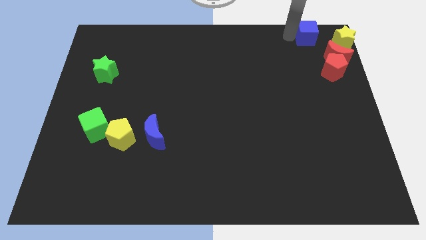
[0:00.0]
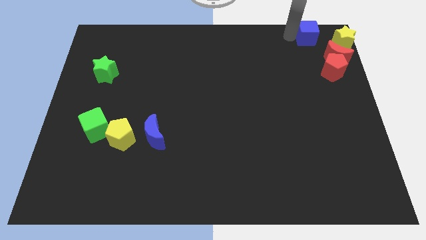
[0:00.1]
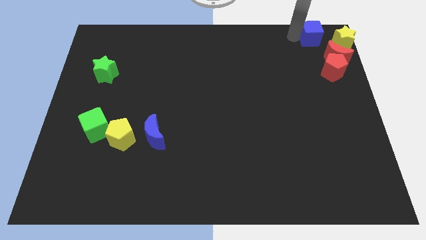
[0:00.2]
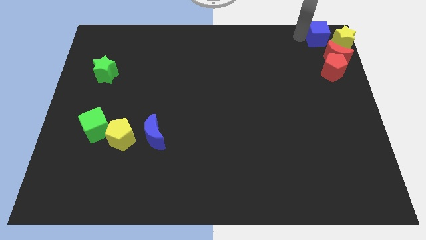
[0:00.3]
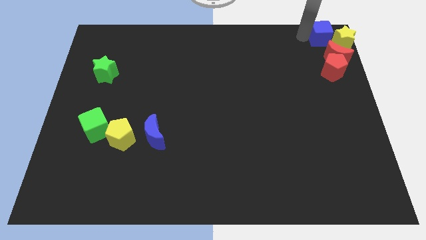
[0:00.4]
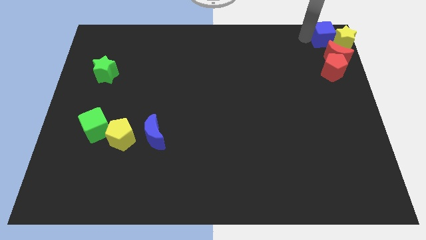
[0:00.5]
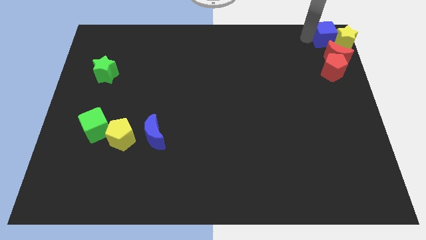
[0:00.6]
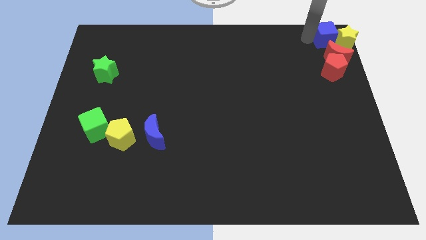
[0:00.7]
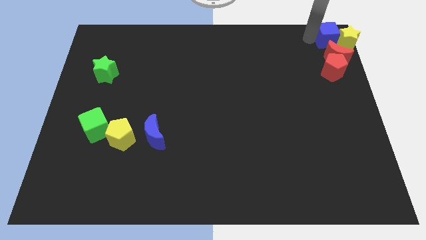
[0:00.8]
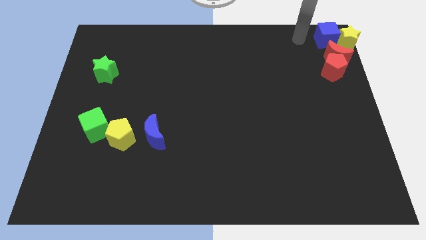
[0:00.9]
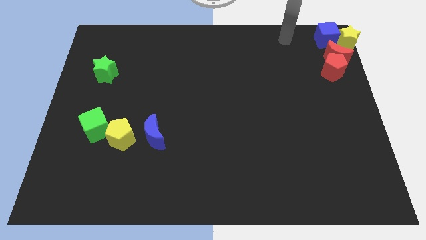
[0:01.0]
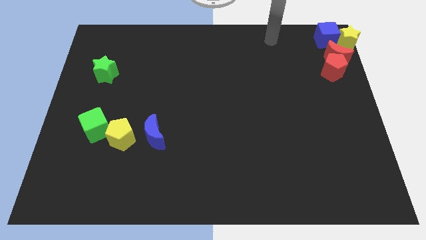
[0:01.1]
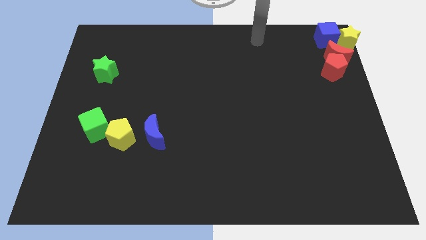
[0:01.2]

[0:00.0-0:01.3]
place the blue cube to the left side of the yellow star

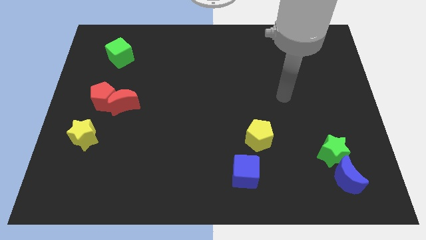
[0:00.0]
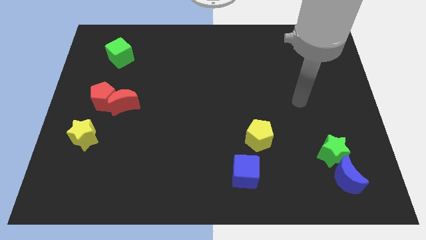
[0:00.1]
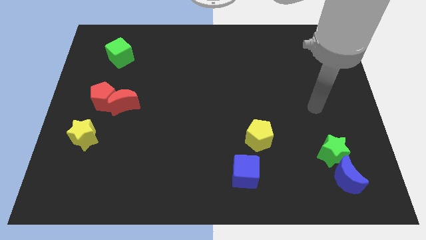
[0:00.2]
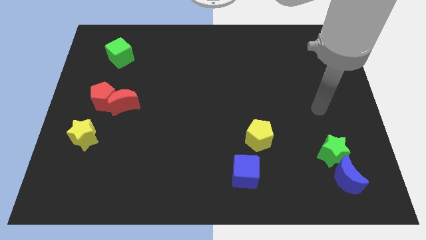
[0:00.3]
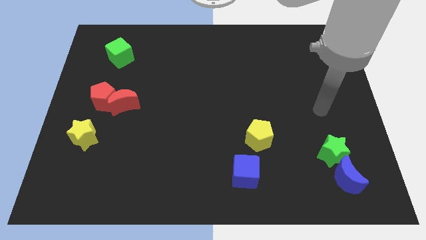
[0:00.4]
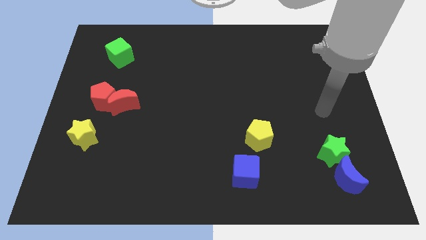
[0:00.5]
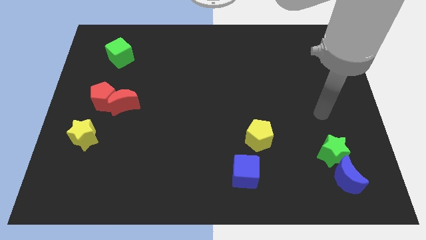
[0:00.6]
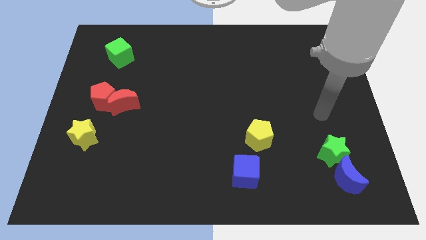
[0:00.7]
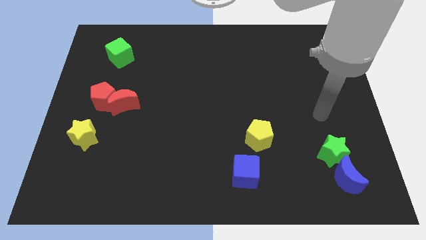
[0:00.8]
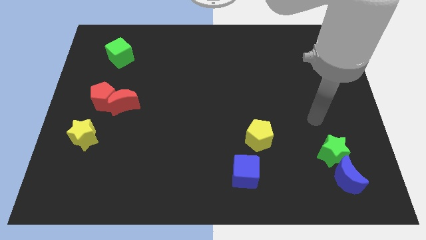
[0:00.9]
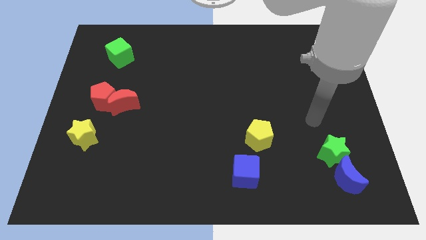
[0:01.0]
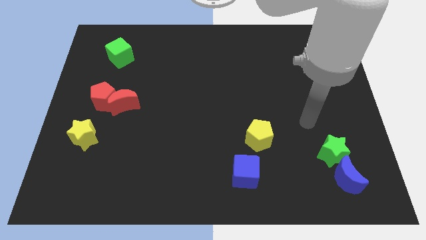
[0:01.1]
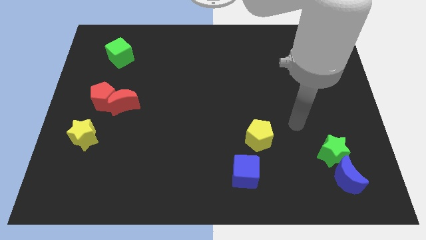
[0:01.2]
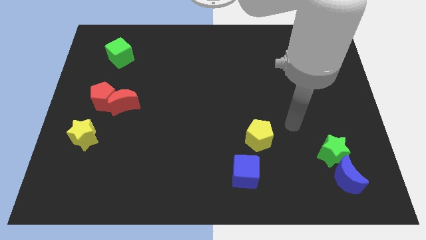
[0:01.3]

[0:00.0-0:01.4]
point your hand at the top right side of the yellow pentagon

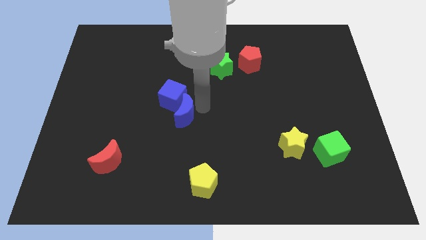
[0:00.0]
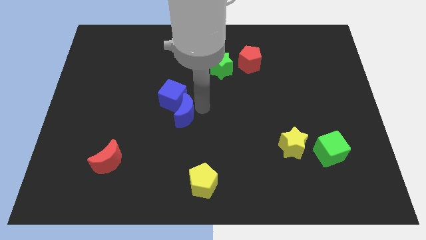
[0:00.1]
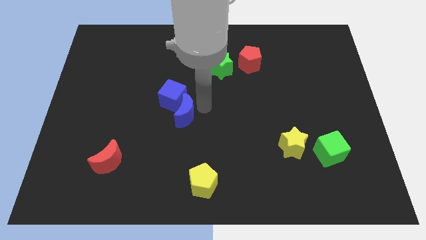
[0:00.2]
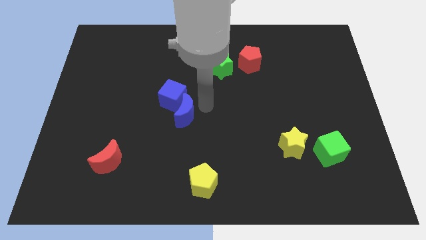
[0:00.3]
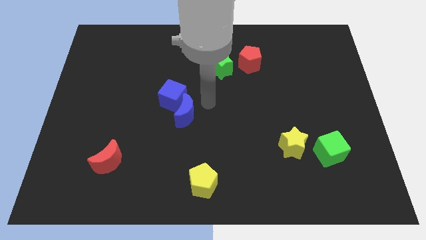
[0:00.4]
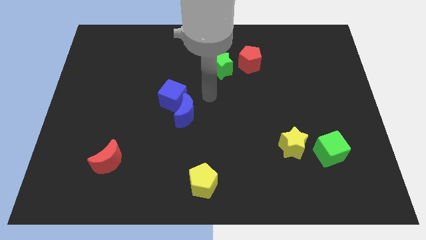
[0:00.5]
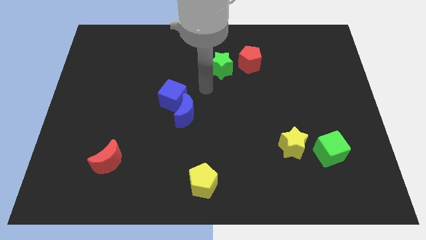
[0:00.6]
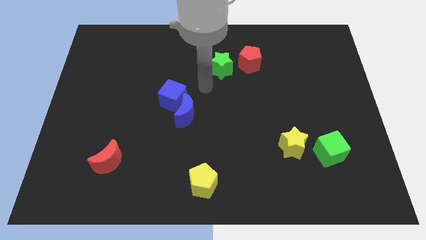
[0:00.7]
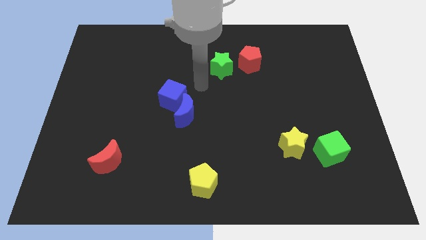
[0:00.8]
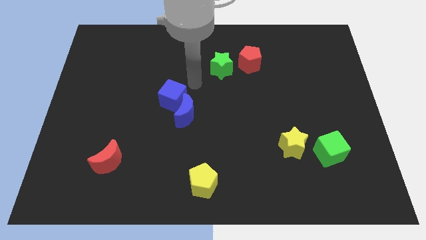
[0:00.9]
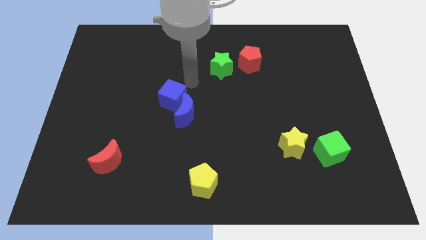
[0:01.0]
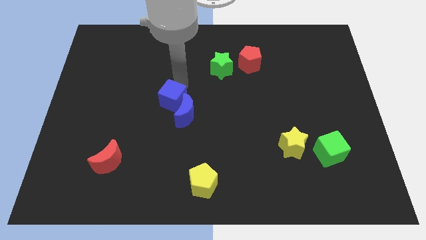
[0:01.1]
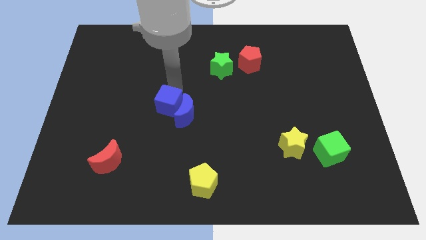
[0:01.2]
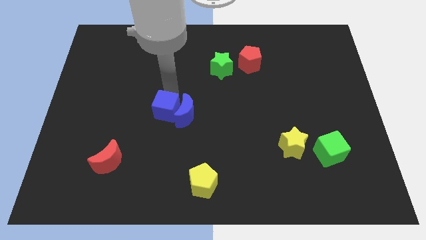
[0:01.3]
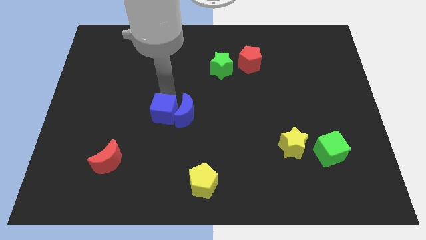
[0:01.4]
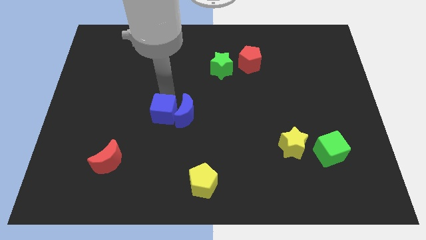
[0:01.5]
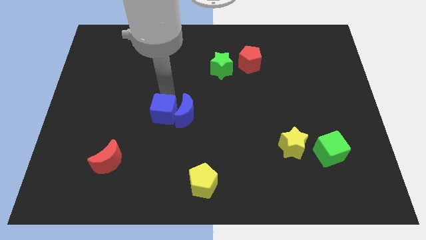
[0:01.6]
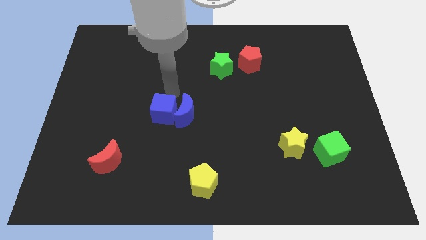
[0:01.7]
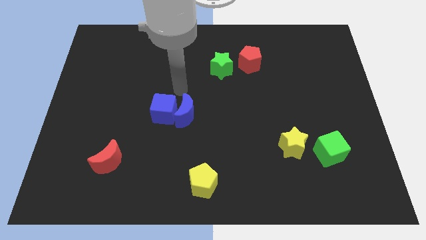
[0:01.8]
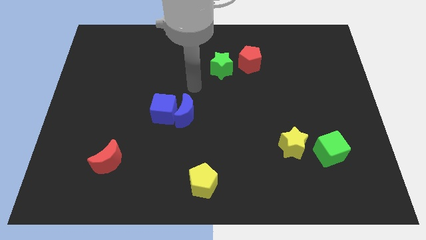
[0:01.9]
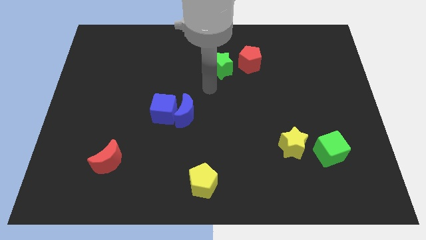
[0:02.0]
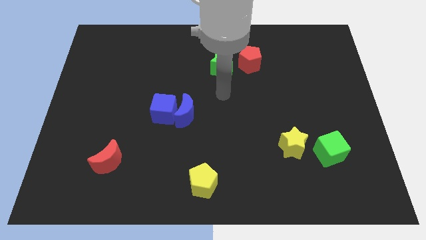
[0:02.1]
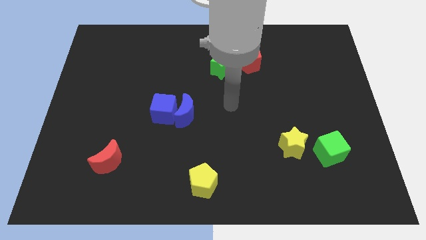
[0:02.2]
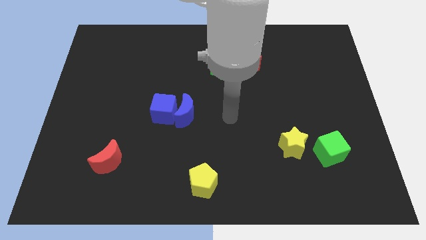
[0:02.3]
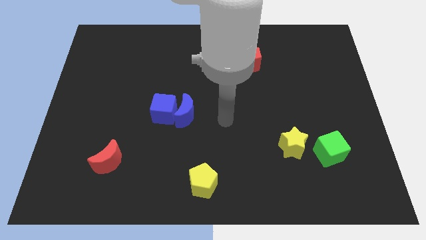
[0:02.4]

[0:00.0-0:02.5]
place the blue cube left to the blue crescent

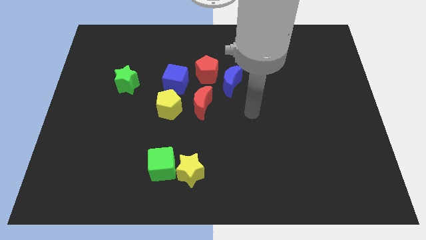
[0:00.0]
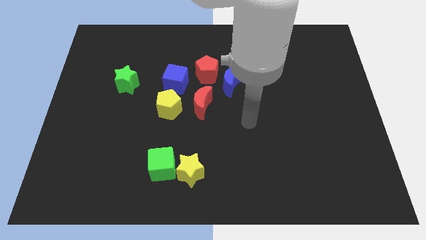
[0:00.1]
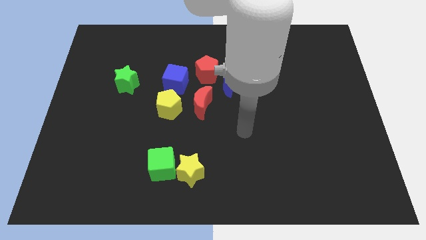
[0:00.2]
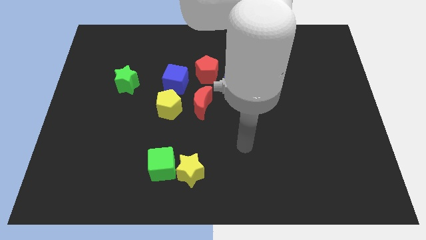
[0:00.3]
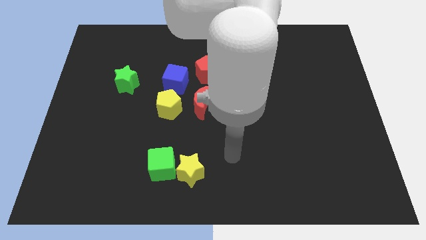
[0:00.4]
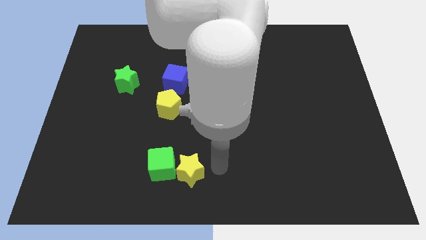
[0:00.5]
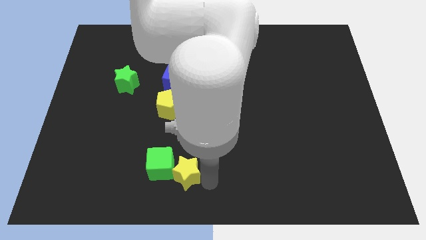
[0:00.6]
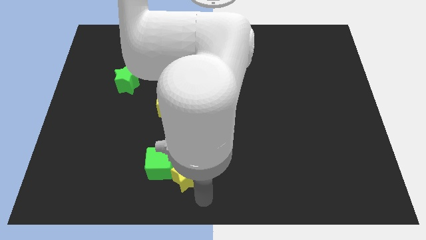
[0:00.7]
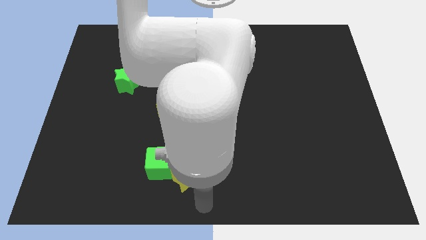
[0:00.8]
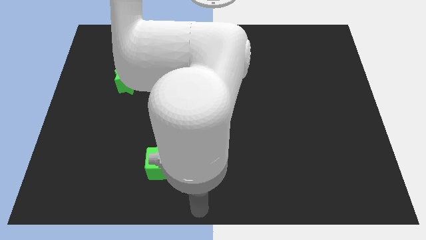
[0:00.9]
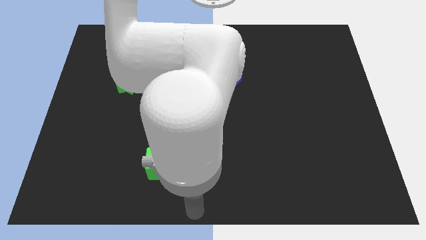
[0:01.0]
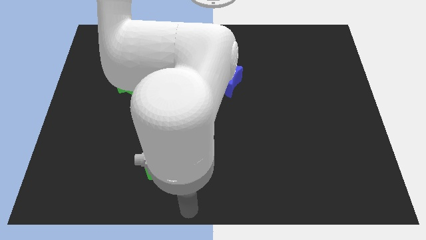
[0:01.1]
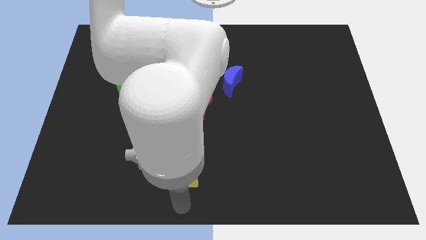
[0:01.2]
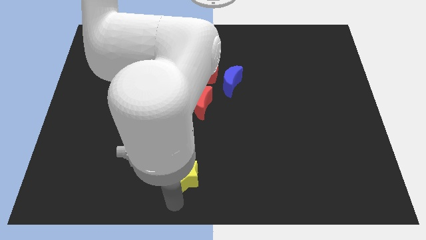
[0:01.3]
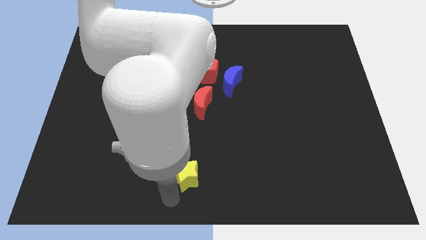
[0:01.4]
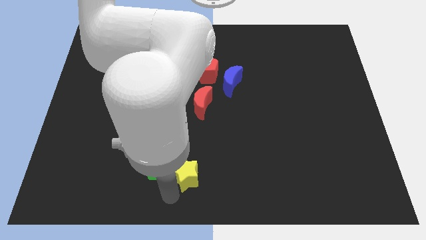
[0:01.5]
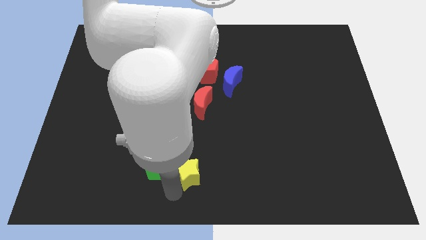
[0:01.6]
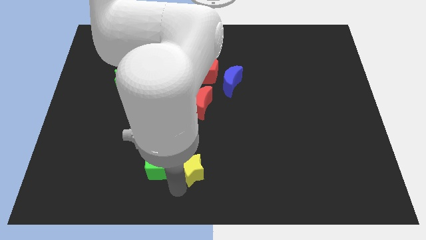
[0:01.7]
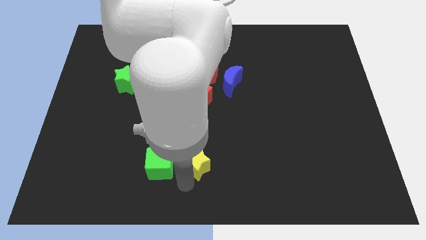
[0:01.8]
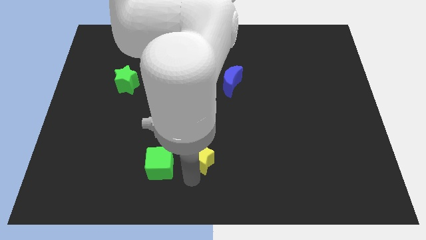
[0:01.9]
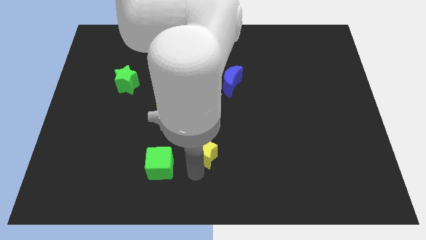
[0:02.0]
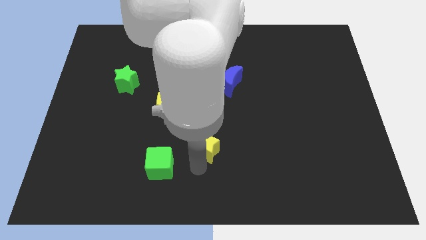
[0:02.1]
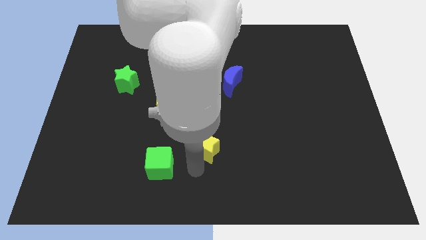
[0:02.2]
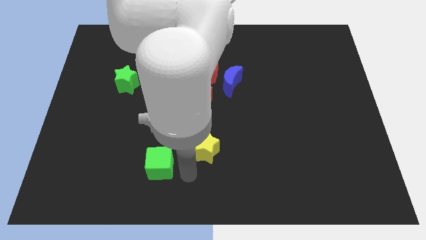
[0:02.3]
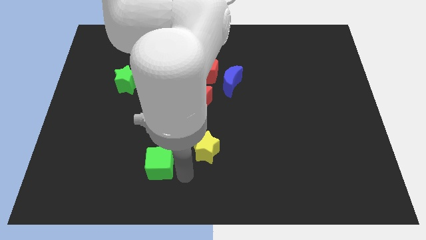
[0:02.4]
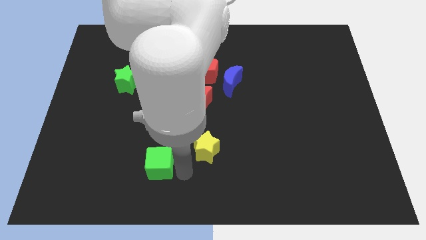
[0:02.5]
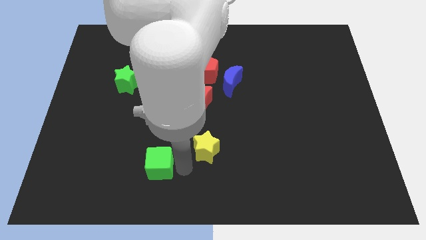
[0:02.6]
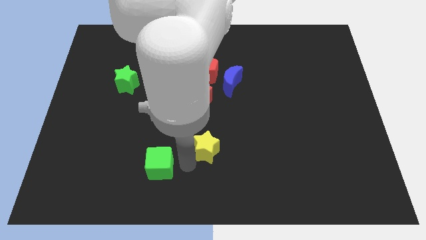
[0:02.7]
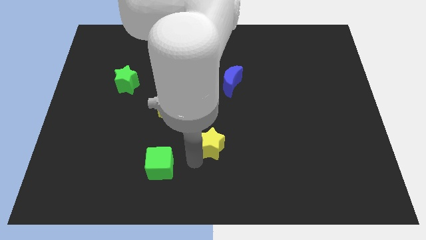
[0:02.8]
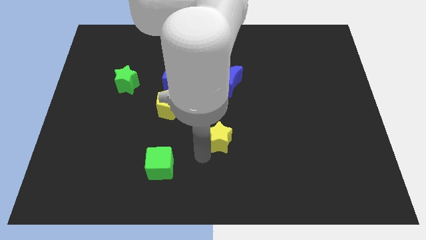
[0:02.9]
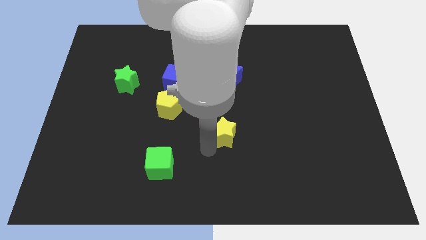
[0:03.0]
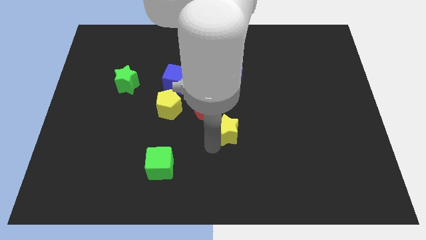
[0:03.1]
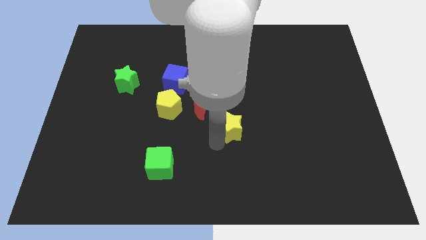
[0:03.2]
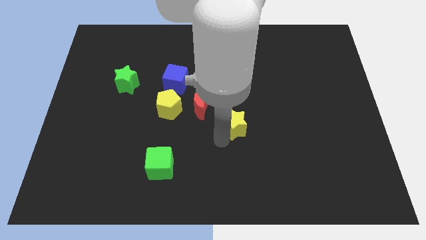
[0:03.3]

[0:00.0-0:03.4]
move the yellow star away from the green cube

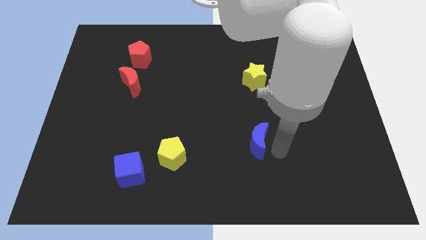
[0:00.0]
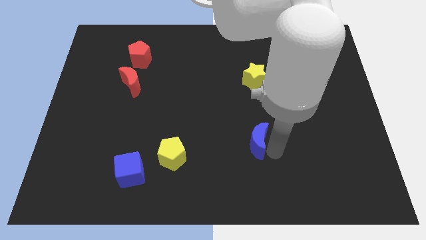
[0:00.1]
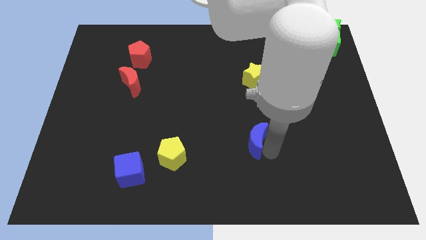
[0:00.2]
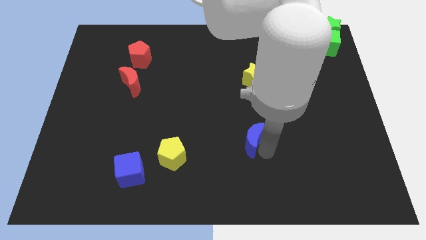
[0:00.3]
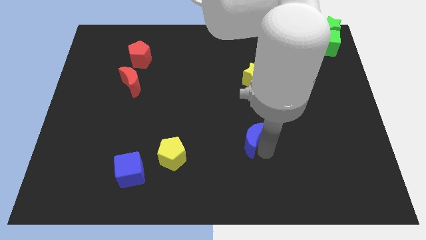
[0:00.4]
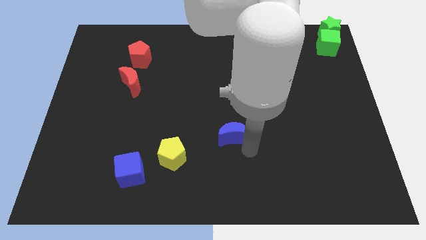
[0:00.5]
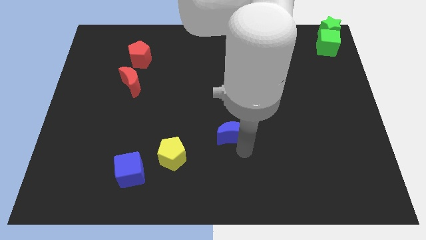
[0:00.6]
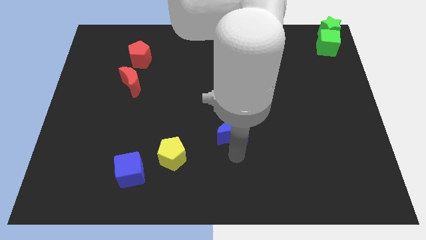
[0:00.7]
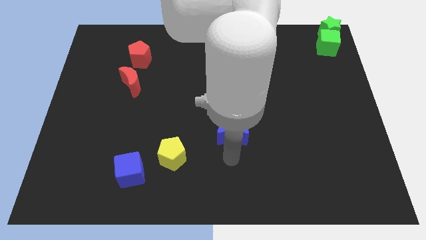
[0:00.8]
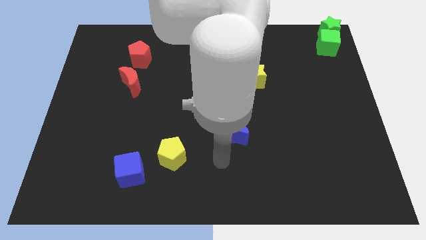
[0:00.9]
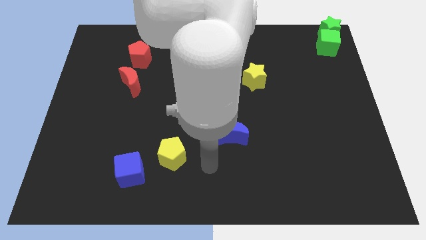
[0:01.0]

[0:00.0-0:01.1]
push the blue crescent slightly to the left
